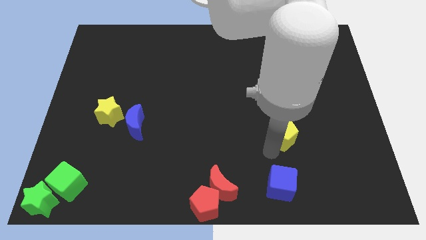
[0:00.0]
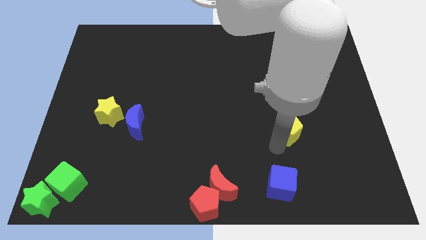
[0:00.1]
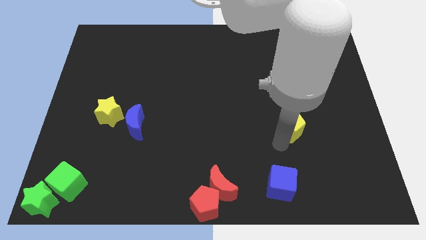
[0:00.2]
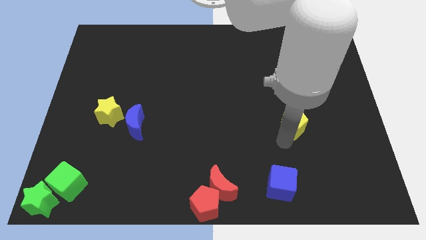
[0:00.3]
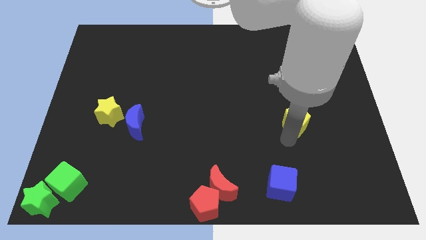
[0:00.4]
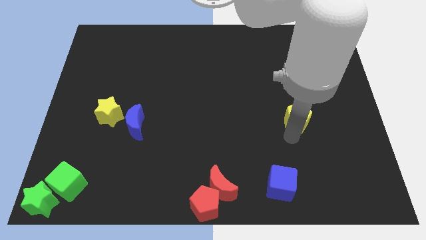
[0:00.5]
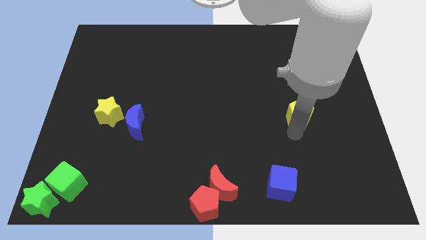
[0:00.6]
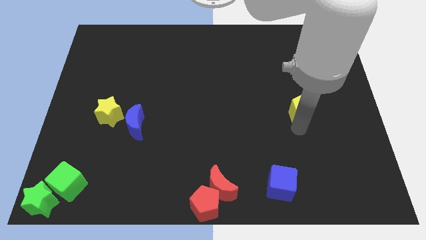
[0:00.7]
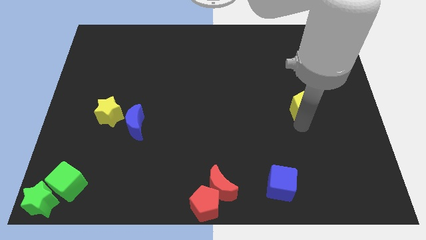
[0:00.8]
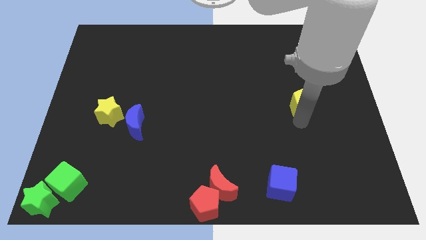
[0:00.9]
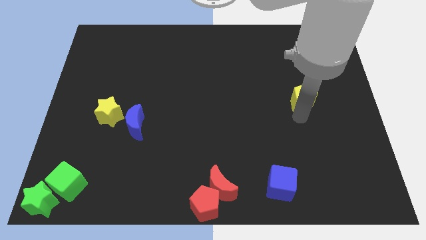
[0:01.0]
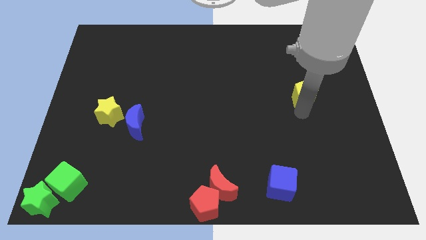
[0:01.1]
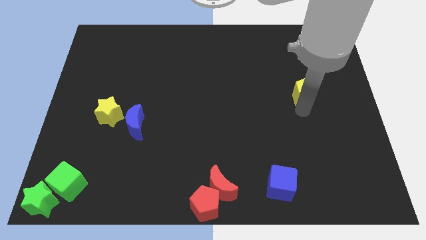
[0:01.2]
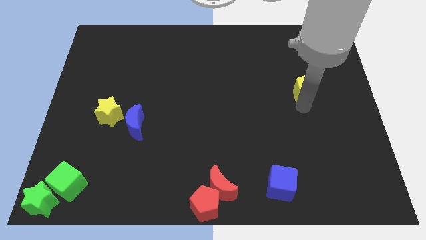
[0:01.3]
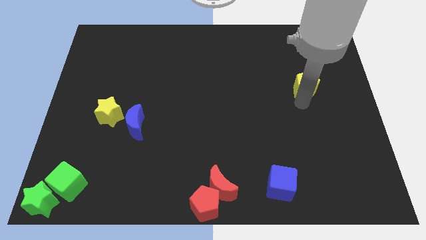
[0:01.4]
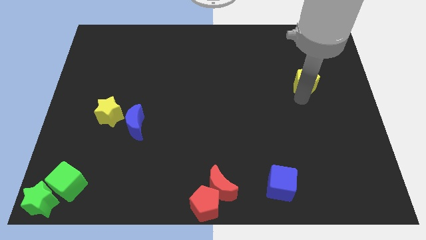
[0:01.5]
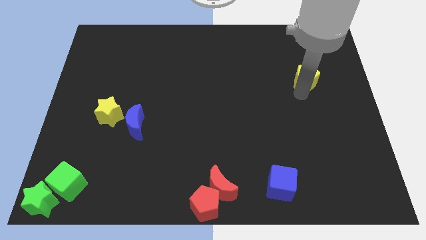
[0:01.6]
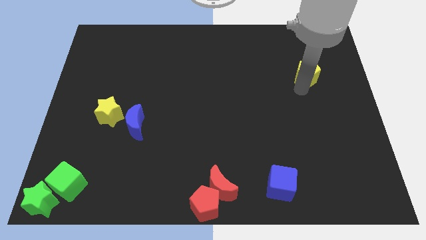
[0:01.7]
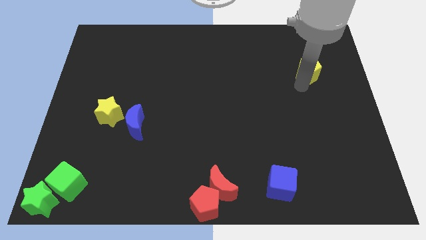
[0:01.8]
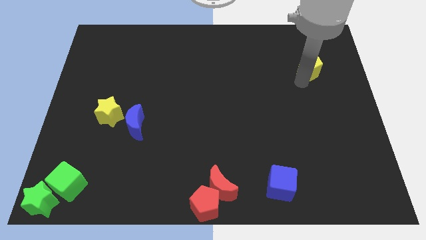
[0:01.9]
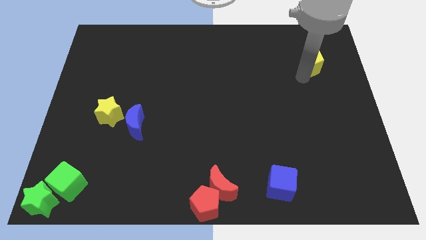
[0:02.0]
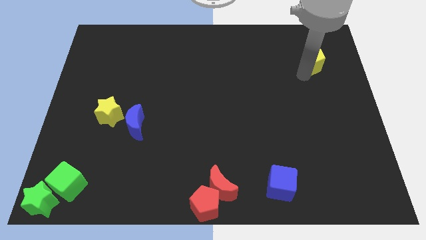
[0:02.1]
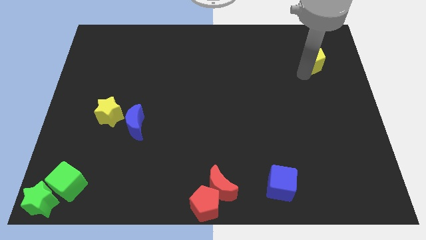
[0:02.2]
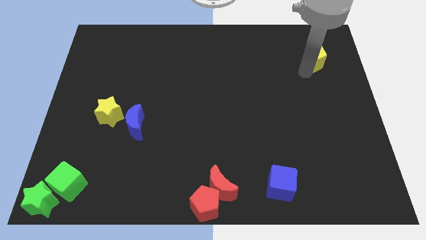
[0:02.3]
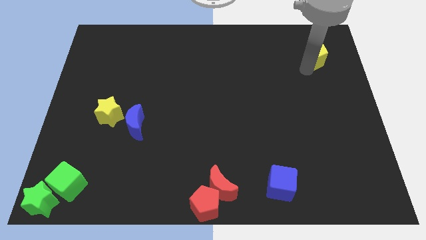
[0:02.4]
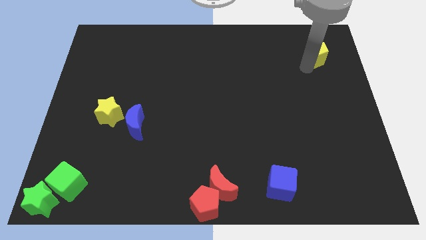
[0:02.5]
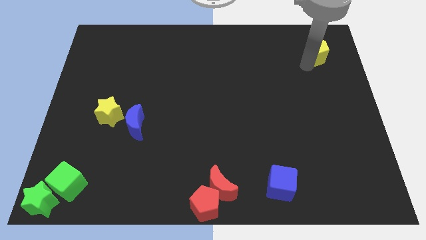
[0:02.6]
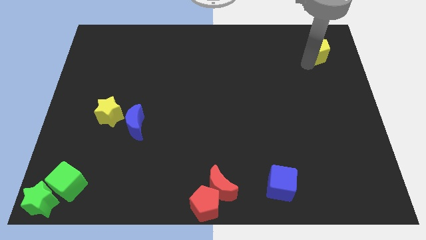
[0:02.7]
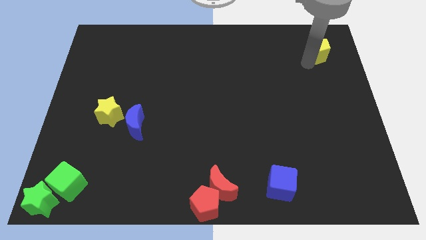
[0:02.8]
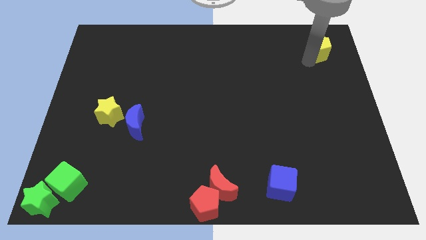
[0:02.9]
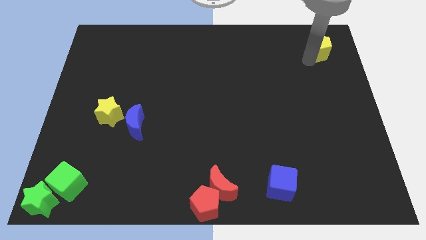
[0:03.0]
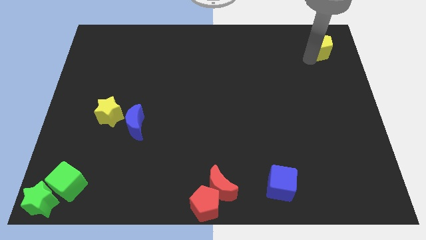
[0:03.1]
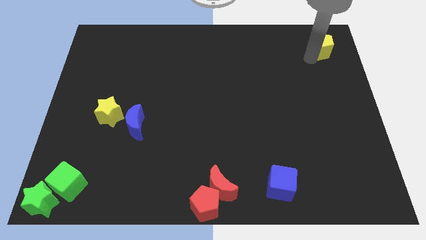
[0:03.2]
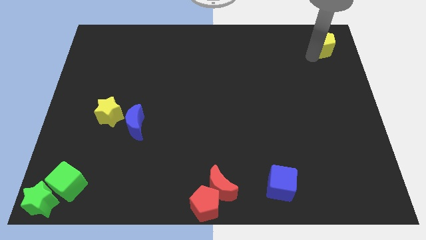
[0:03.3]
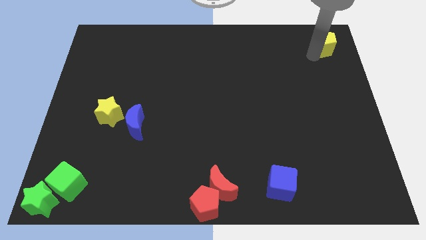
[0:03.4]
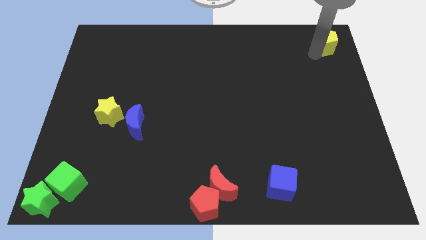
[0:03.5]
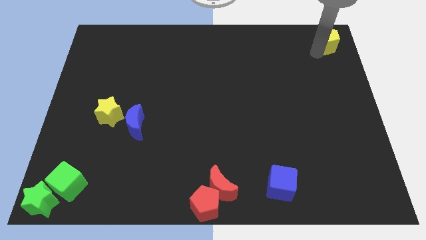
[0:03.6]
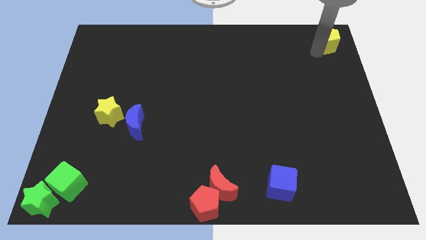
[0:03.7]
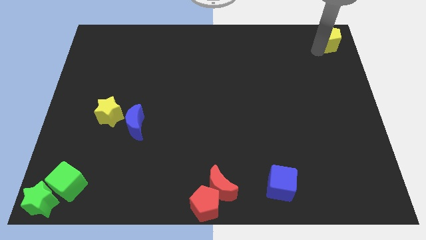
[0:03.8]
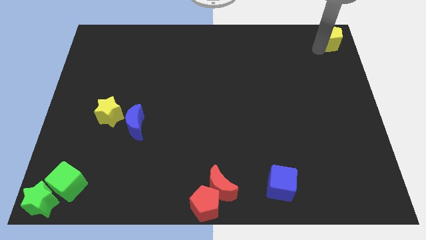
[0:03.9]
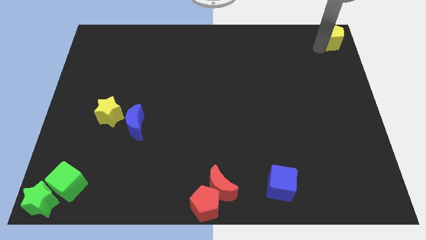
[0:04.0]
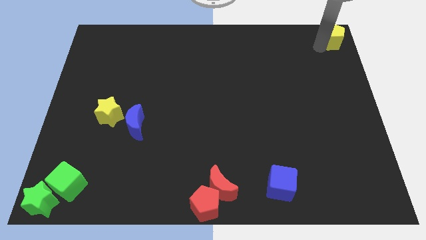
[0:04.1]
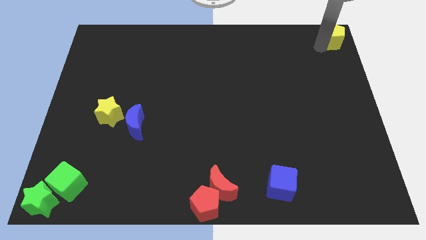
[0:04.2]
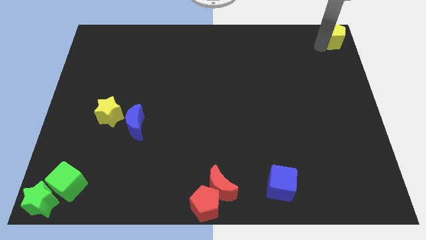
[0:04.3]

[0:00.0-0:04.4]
move the yellow pentagon to the top right of the board

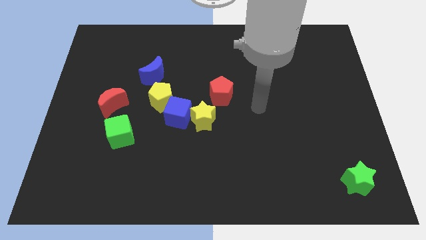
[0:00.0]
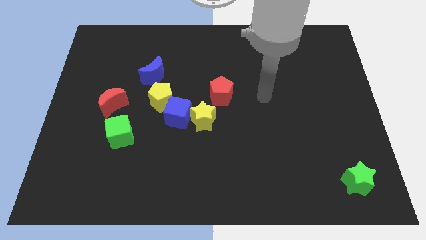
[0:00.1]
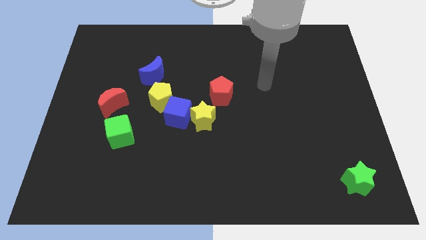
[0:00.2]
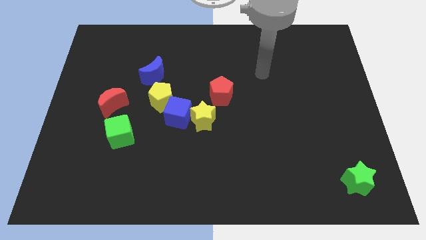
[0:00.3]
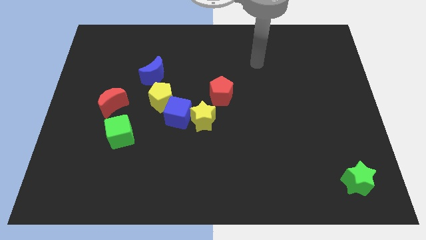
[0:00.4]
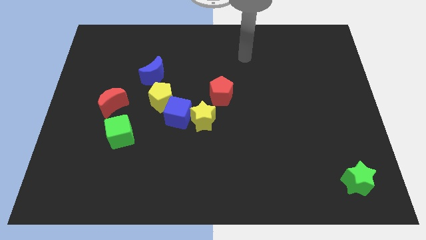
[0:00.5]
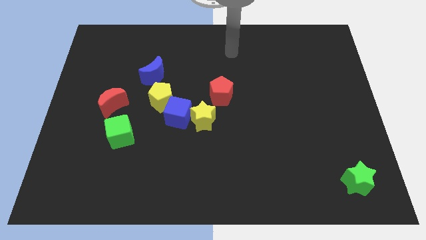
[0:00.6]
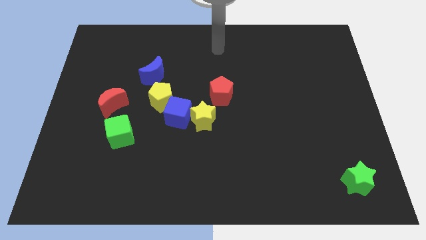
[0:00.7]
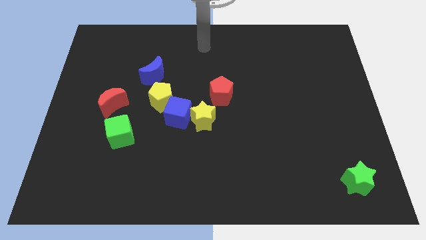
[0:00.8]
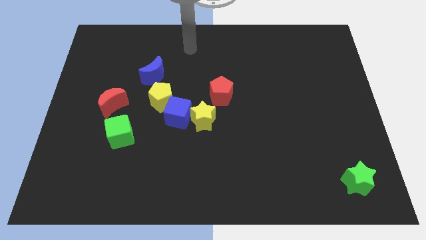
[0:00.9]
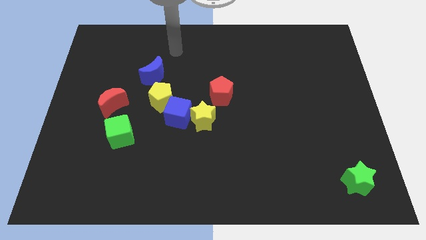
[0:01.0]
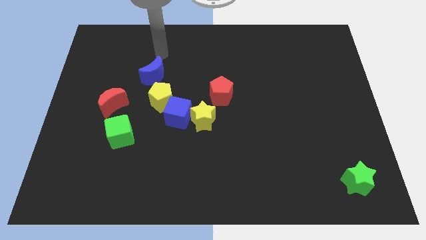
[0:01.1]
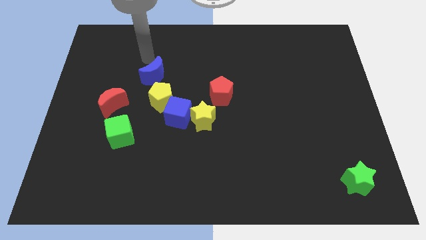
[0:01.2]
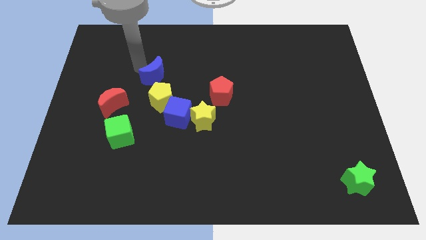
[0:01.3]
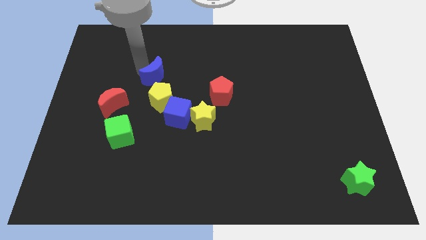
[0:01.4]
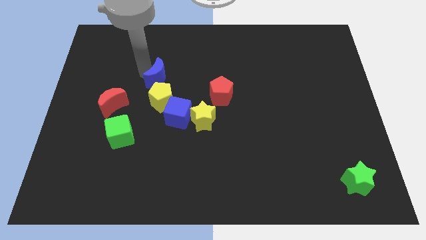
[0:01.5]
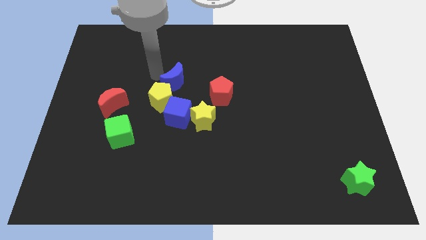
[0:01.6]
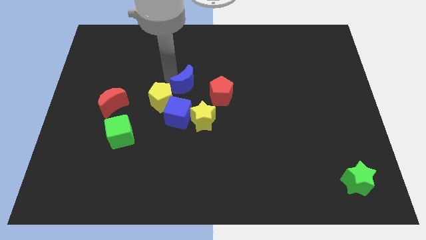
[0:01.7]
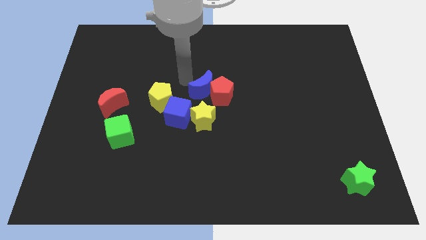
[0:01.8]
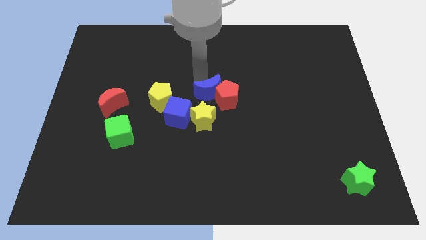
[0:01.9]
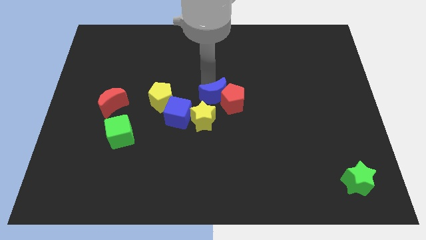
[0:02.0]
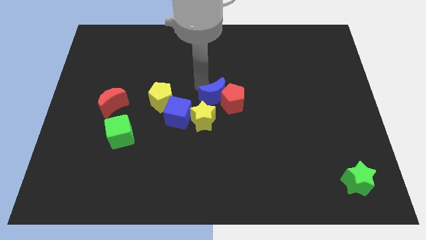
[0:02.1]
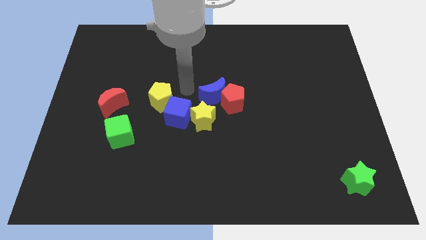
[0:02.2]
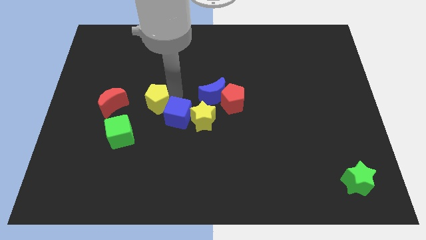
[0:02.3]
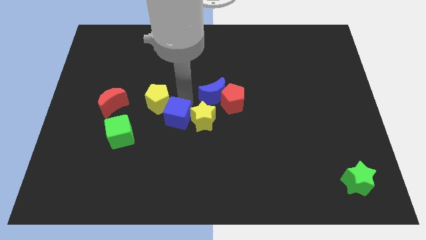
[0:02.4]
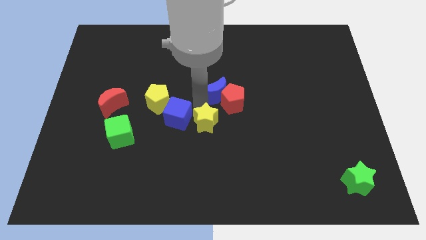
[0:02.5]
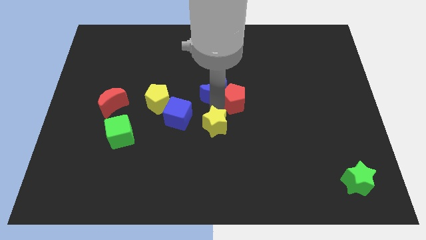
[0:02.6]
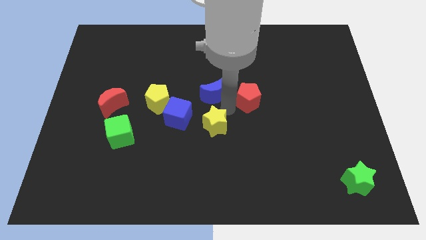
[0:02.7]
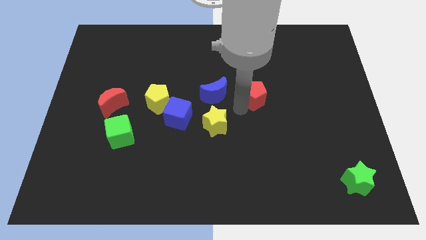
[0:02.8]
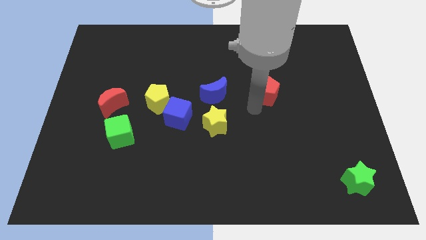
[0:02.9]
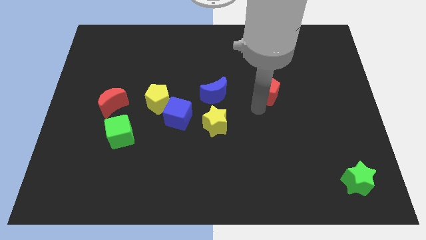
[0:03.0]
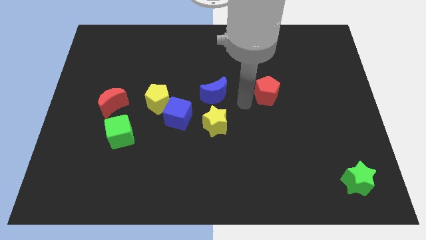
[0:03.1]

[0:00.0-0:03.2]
push the blue crescent into red pentagon

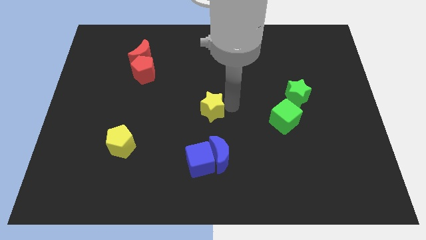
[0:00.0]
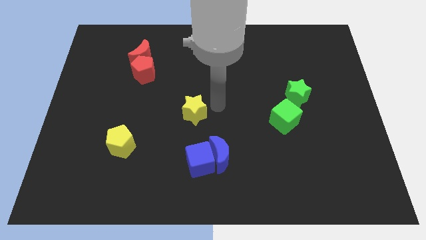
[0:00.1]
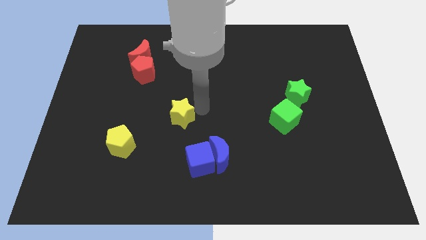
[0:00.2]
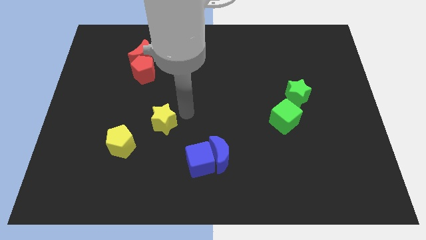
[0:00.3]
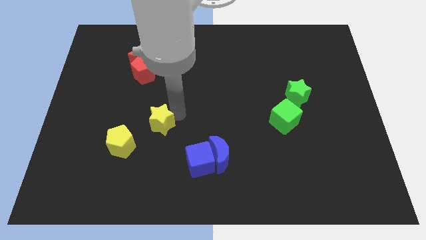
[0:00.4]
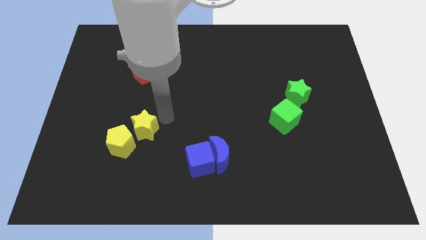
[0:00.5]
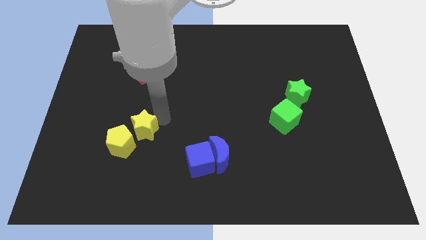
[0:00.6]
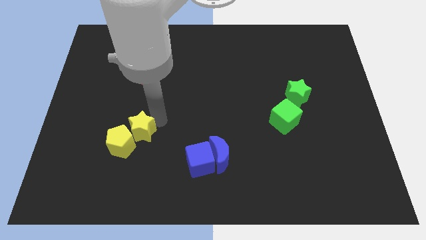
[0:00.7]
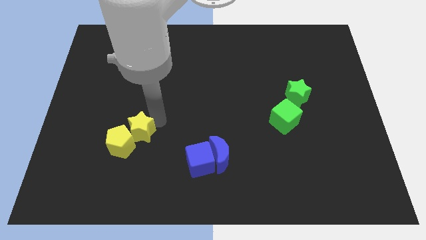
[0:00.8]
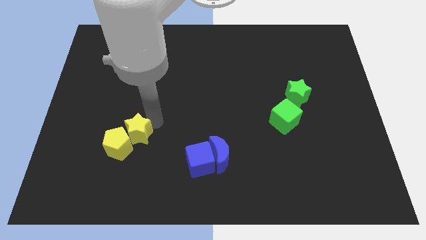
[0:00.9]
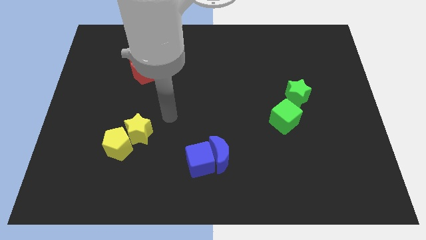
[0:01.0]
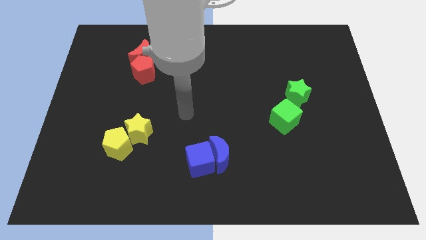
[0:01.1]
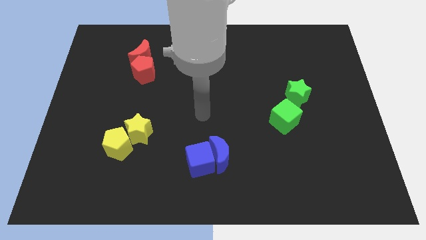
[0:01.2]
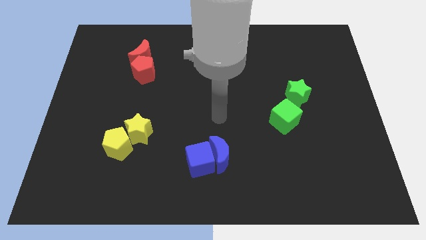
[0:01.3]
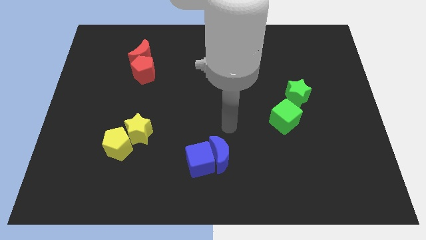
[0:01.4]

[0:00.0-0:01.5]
push the yellow star into the yellow pentagon
